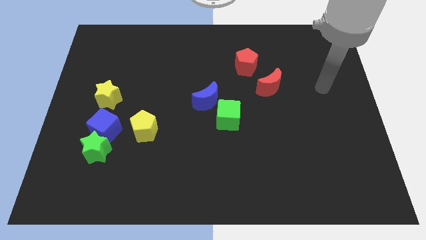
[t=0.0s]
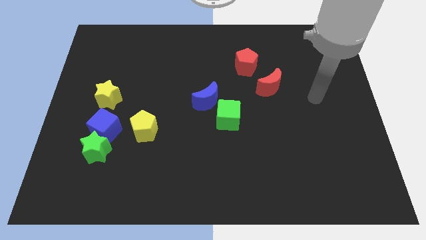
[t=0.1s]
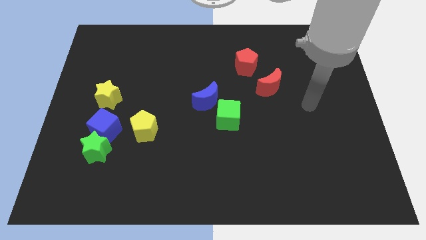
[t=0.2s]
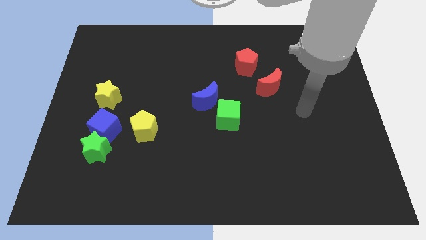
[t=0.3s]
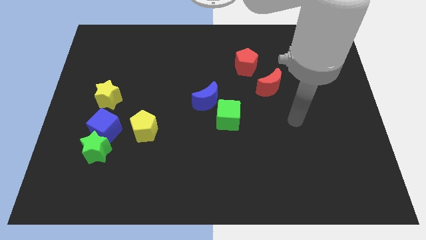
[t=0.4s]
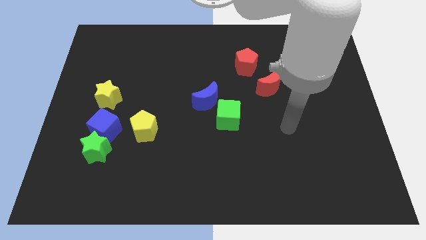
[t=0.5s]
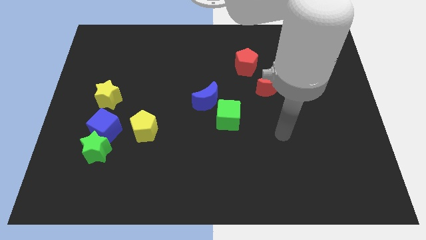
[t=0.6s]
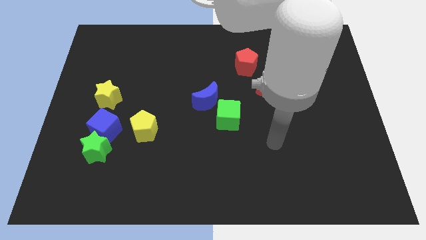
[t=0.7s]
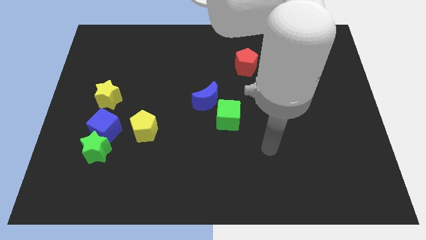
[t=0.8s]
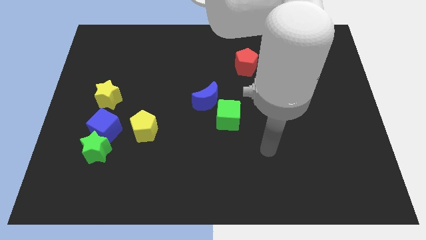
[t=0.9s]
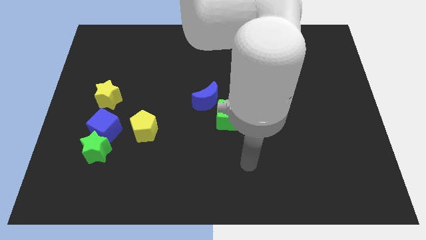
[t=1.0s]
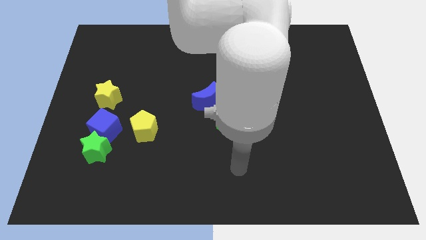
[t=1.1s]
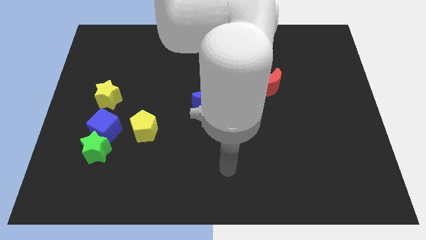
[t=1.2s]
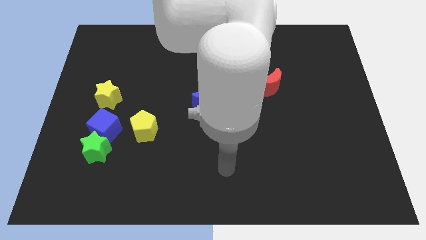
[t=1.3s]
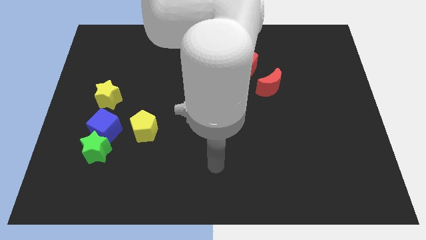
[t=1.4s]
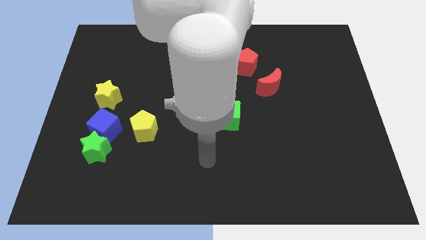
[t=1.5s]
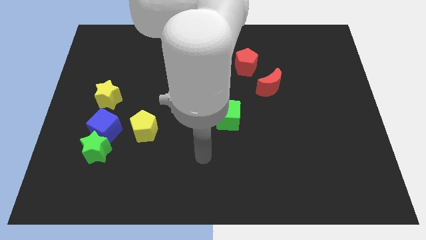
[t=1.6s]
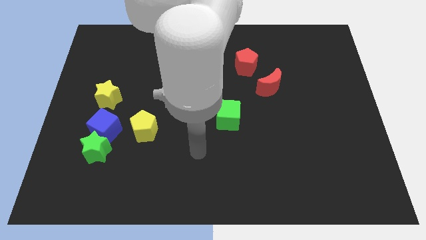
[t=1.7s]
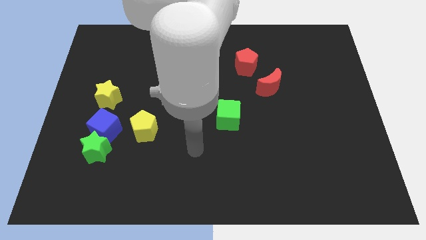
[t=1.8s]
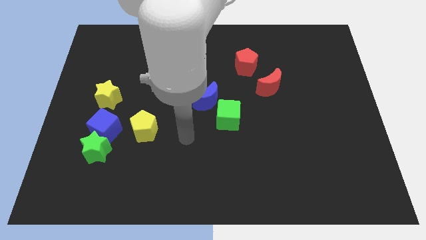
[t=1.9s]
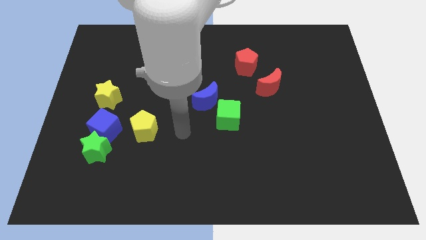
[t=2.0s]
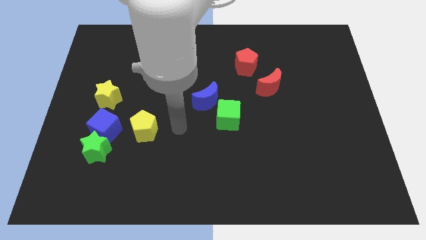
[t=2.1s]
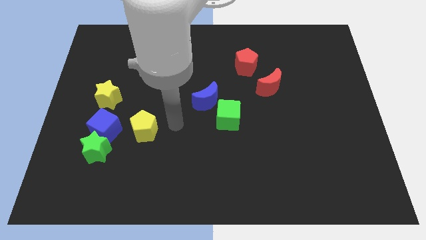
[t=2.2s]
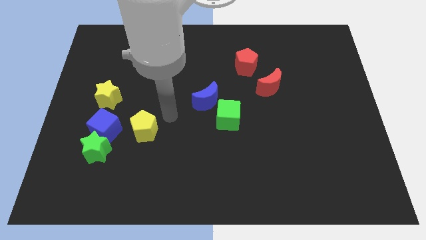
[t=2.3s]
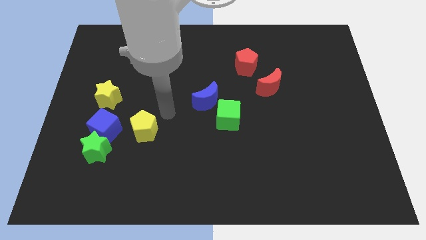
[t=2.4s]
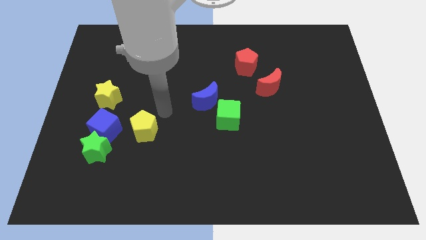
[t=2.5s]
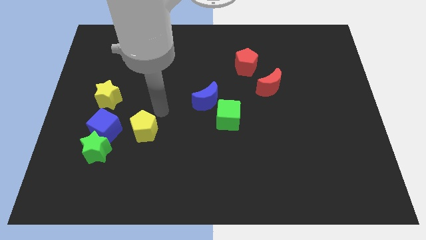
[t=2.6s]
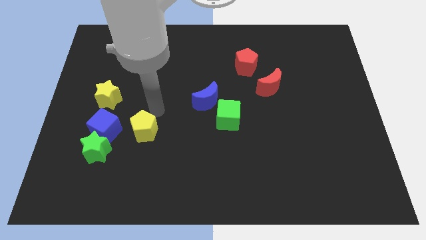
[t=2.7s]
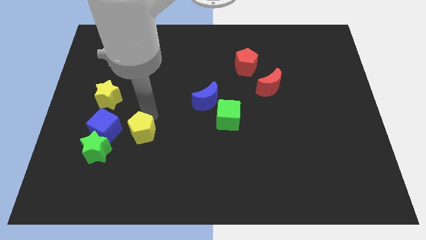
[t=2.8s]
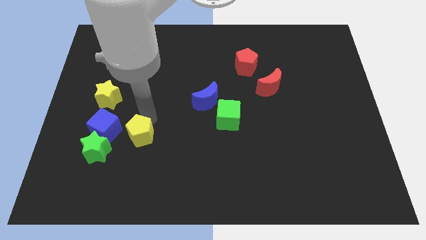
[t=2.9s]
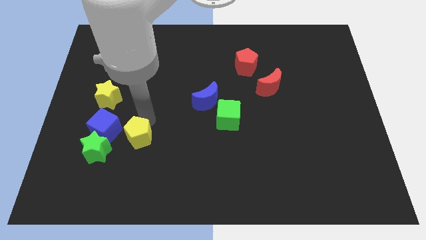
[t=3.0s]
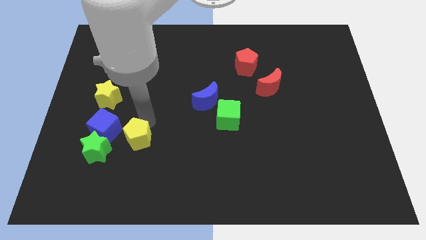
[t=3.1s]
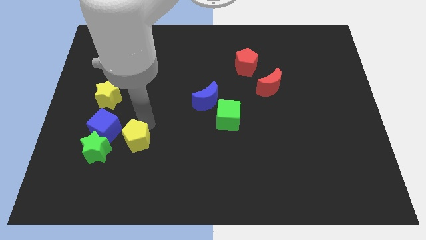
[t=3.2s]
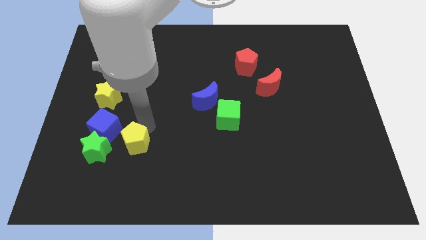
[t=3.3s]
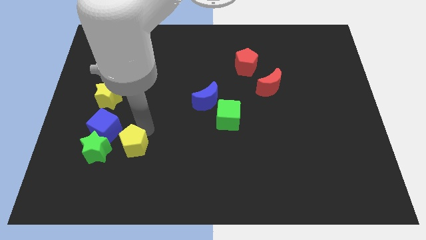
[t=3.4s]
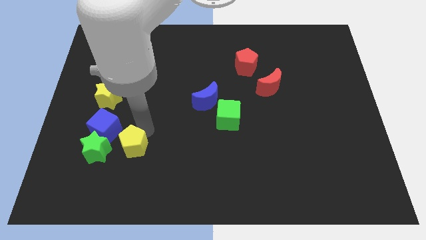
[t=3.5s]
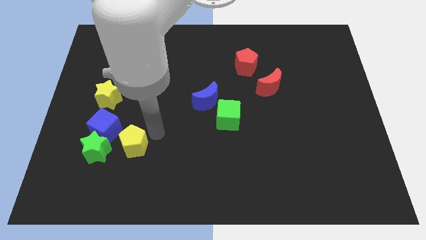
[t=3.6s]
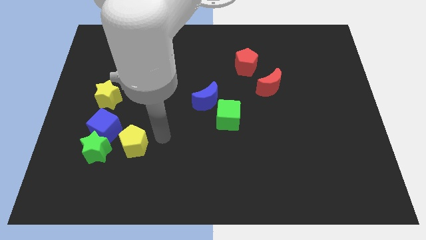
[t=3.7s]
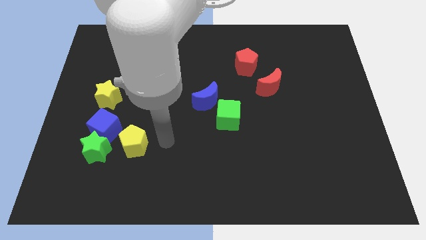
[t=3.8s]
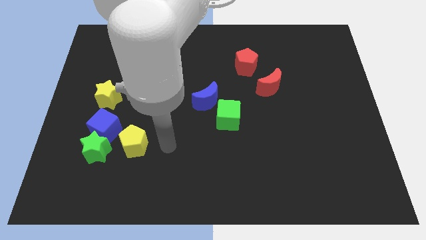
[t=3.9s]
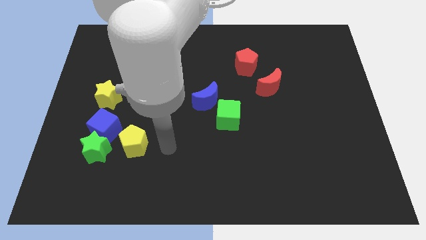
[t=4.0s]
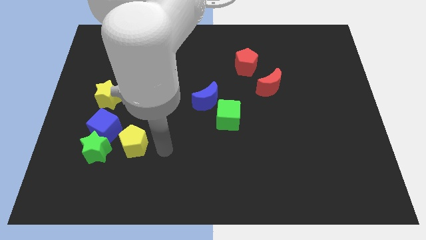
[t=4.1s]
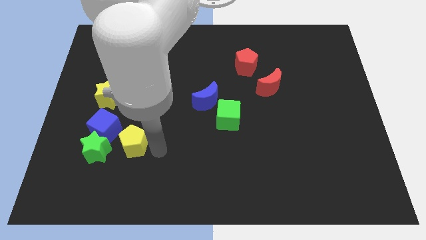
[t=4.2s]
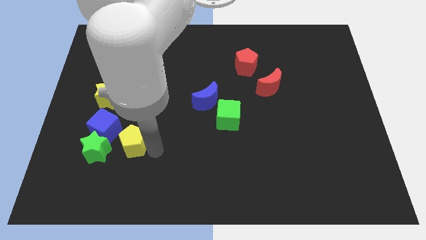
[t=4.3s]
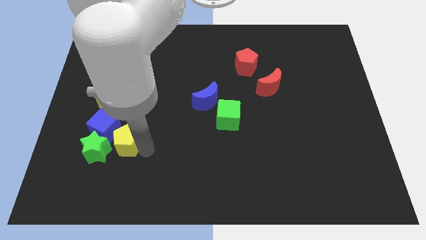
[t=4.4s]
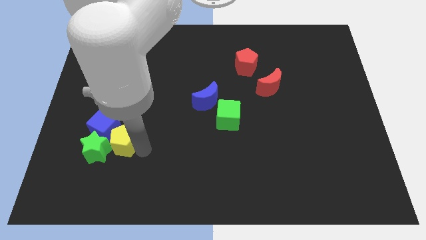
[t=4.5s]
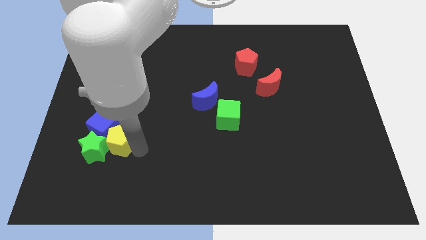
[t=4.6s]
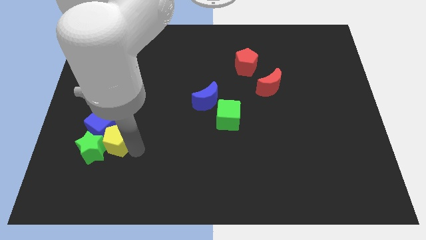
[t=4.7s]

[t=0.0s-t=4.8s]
put the yellow pentagon to the green star

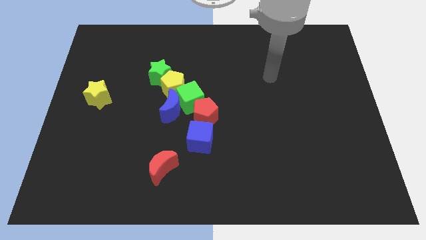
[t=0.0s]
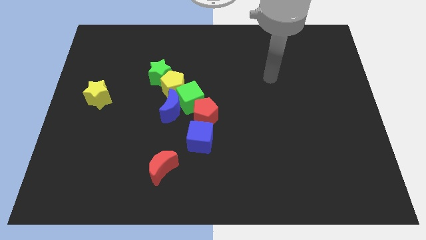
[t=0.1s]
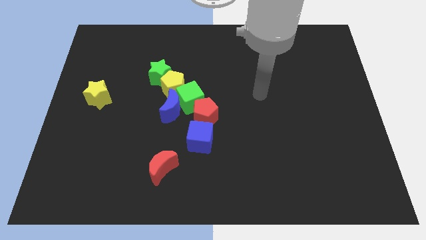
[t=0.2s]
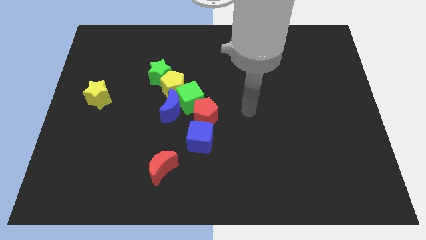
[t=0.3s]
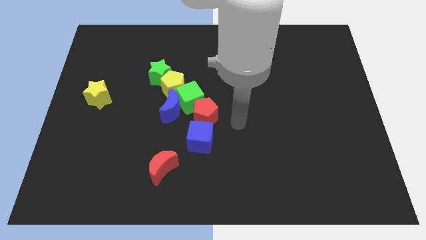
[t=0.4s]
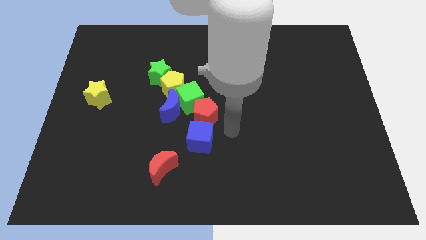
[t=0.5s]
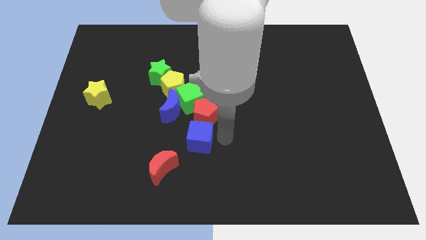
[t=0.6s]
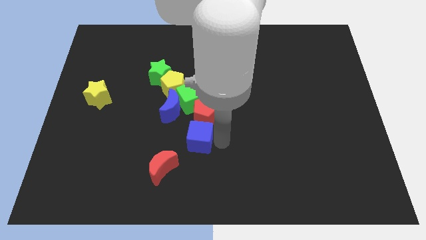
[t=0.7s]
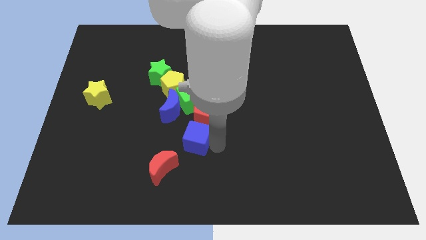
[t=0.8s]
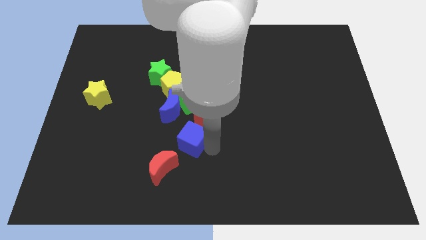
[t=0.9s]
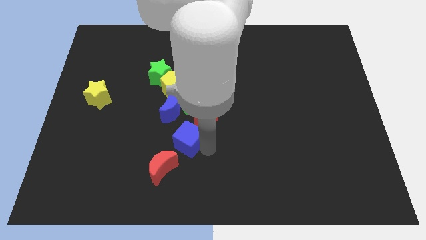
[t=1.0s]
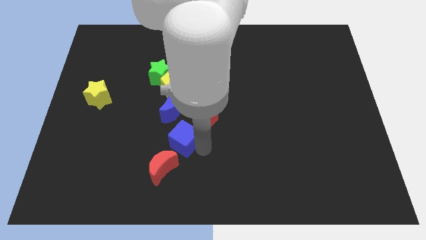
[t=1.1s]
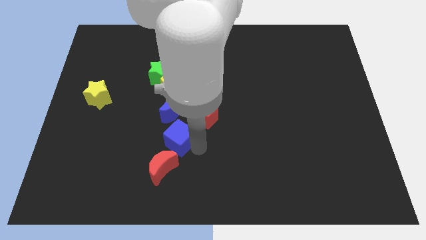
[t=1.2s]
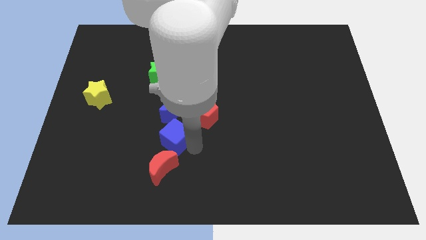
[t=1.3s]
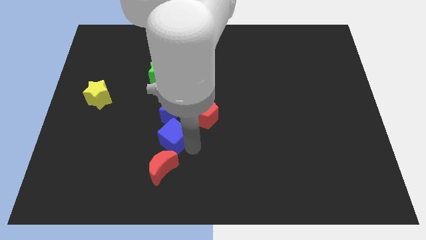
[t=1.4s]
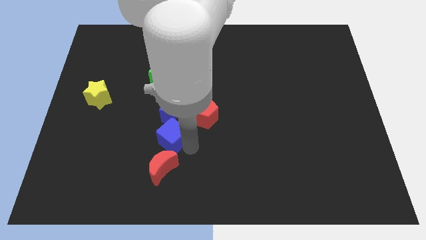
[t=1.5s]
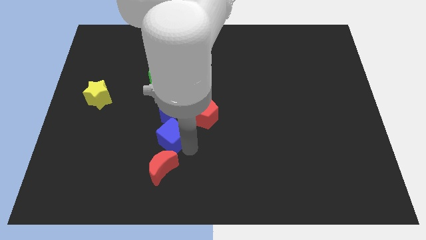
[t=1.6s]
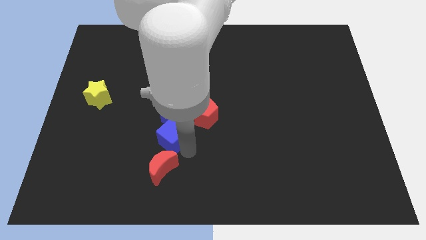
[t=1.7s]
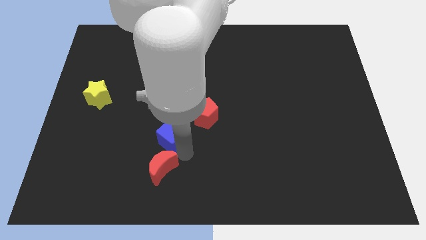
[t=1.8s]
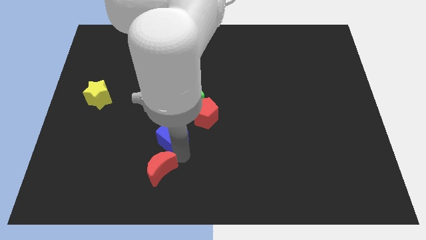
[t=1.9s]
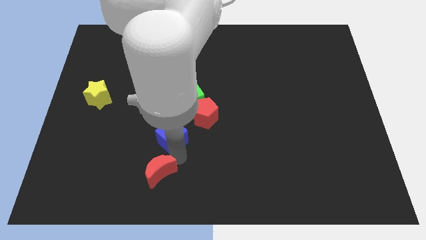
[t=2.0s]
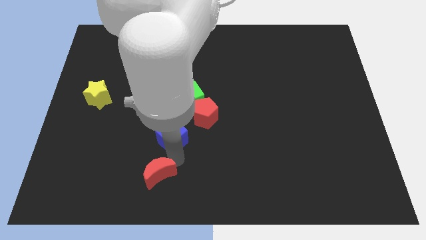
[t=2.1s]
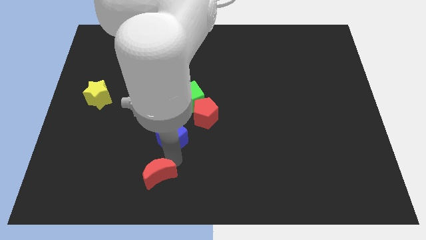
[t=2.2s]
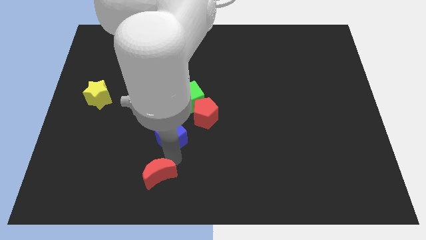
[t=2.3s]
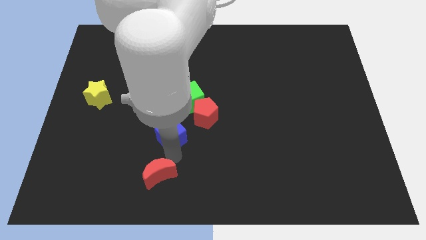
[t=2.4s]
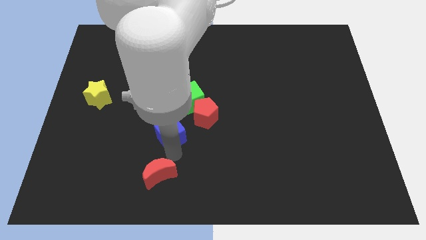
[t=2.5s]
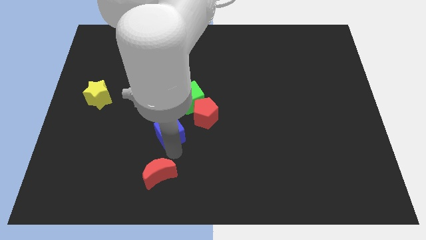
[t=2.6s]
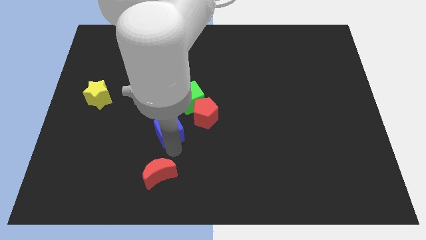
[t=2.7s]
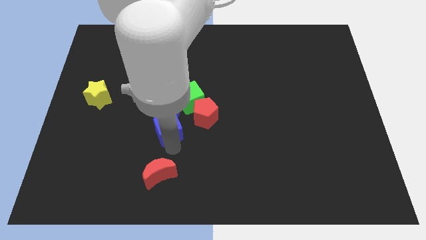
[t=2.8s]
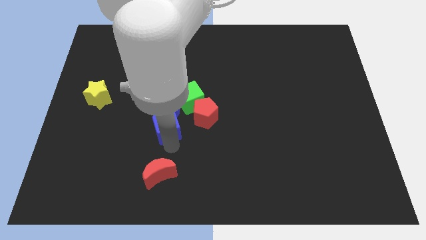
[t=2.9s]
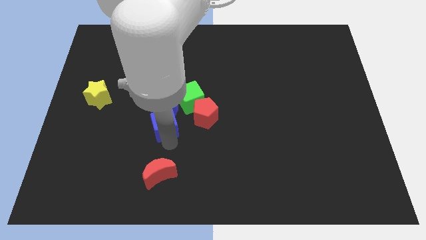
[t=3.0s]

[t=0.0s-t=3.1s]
push the blue cube close to the blue moon

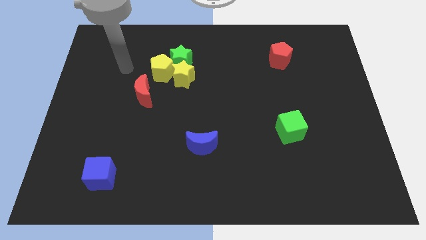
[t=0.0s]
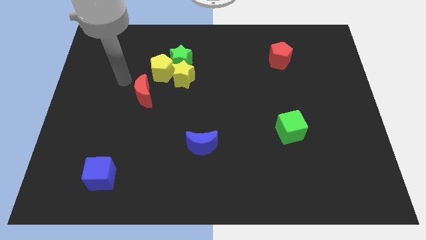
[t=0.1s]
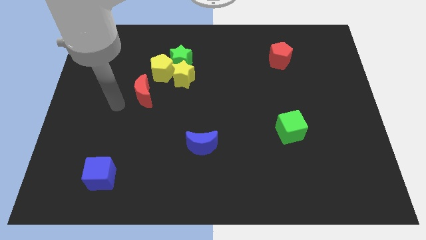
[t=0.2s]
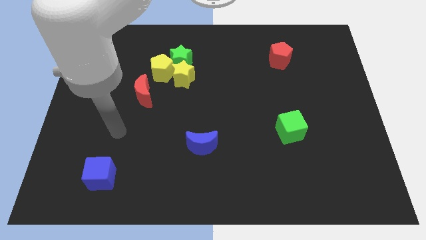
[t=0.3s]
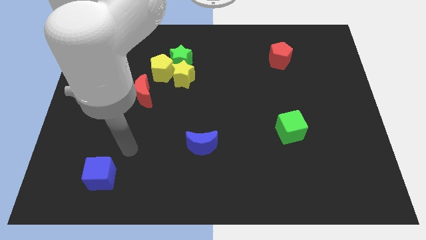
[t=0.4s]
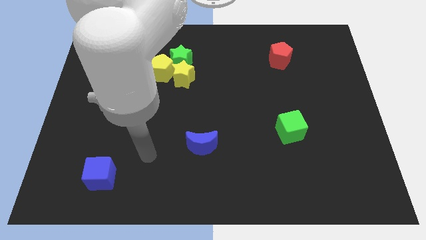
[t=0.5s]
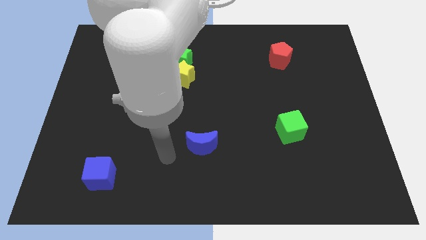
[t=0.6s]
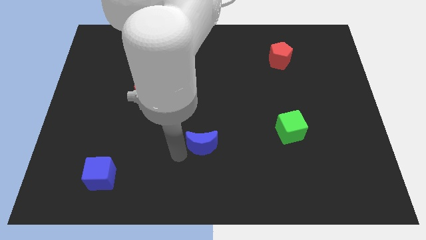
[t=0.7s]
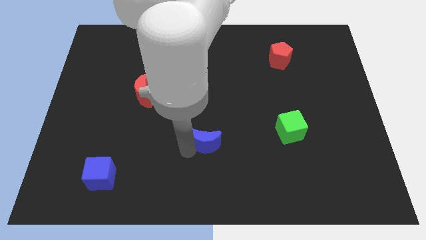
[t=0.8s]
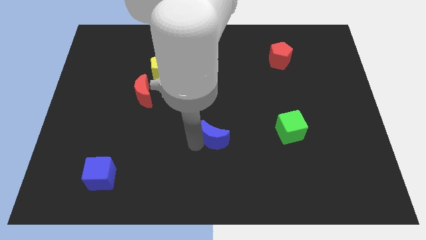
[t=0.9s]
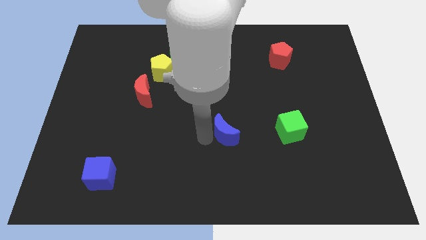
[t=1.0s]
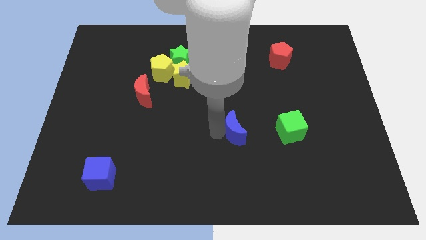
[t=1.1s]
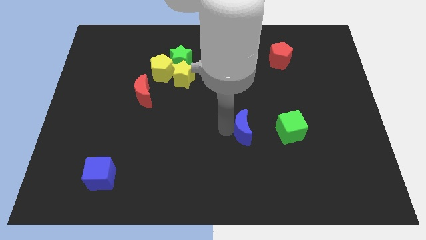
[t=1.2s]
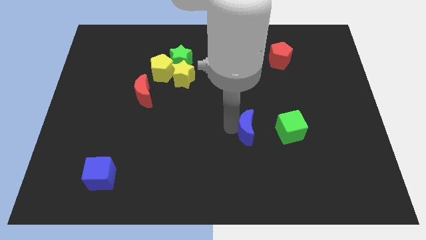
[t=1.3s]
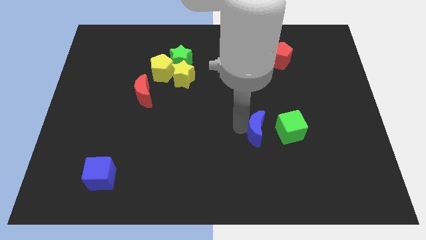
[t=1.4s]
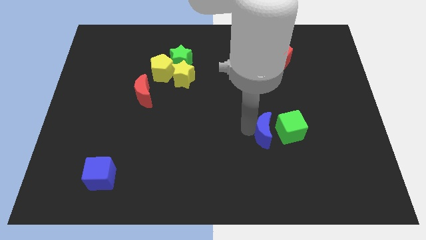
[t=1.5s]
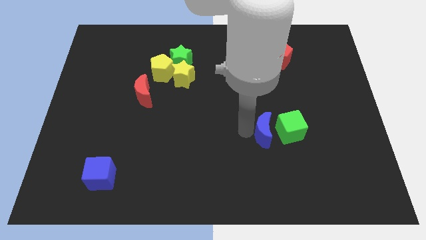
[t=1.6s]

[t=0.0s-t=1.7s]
push the blue moon next to the green cube
